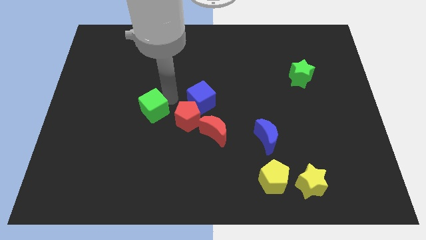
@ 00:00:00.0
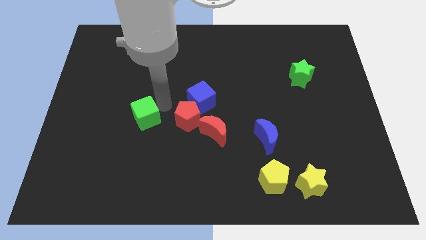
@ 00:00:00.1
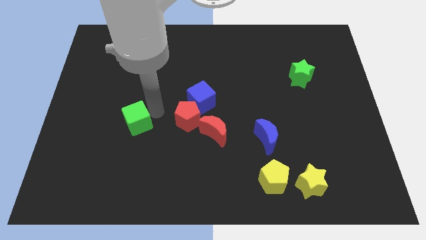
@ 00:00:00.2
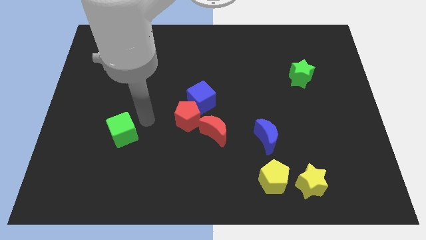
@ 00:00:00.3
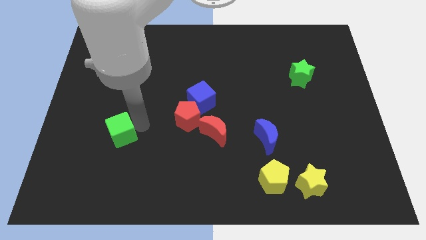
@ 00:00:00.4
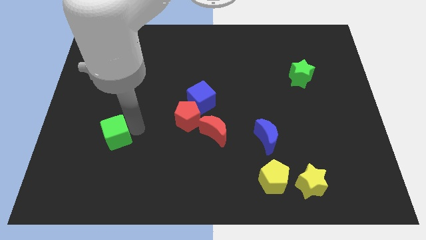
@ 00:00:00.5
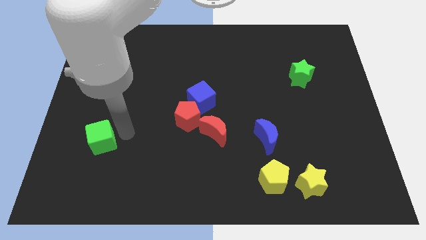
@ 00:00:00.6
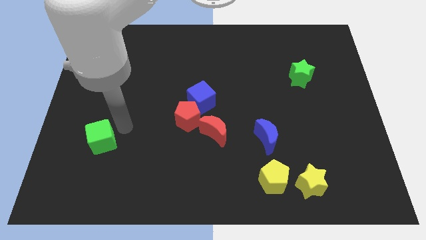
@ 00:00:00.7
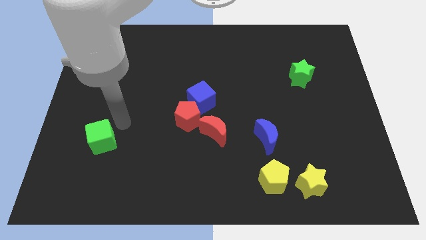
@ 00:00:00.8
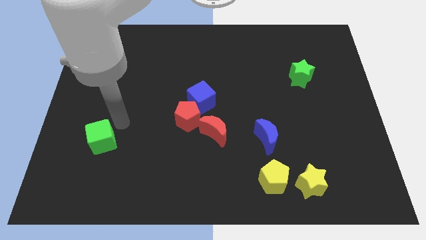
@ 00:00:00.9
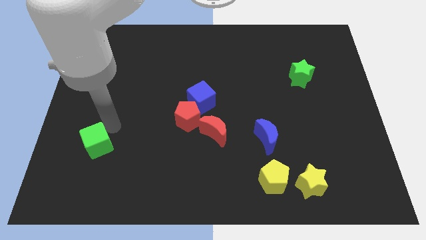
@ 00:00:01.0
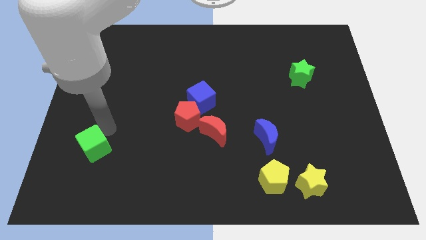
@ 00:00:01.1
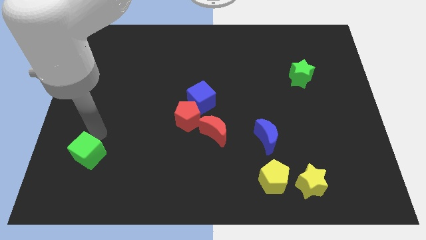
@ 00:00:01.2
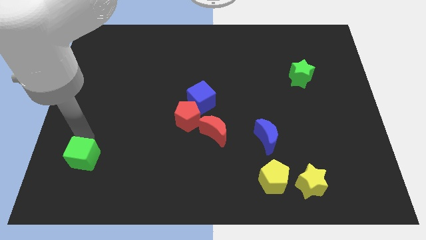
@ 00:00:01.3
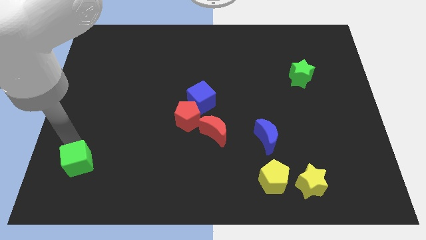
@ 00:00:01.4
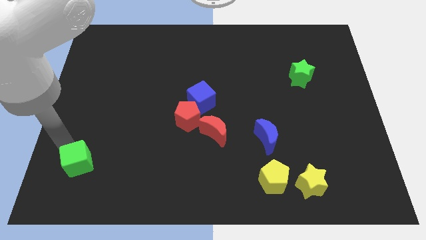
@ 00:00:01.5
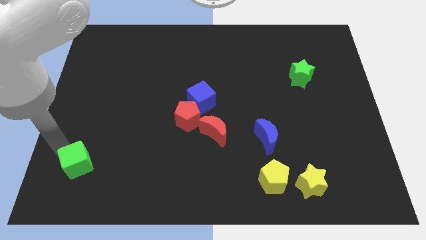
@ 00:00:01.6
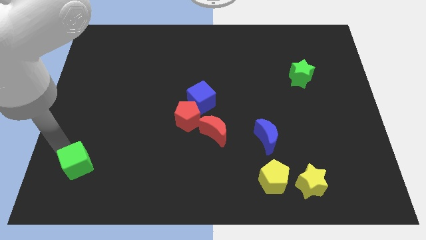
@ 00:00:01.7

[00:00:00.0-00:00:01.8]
move green cube towards bottom side of the board

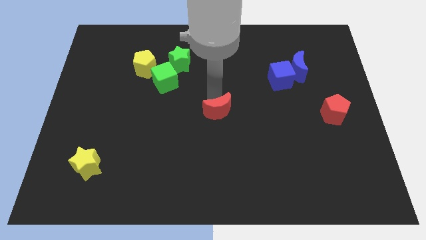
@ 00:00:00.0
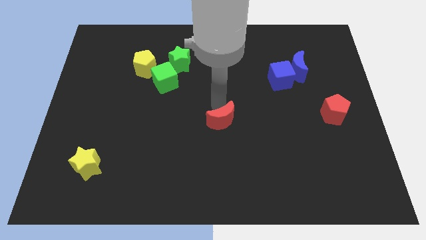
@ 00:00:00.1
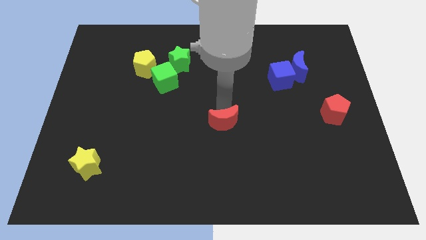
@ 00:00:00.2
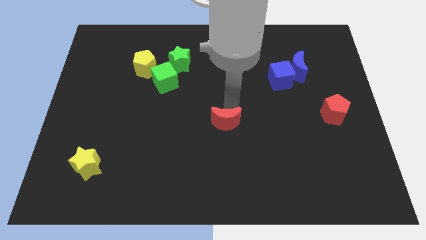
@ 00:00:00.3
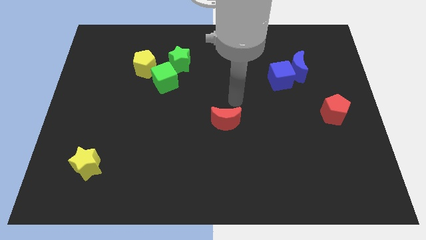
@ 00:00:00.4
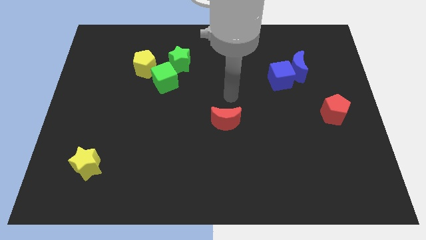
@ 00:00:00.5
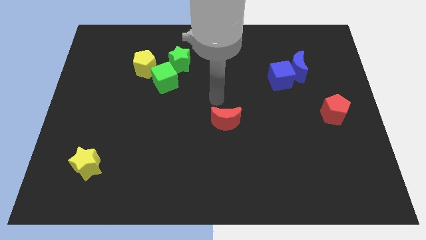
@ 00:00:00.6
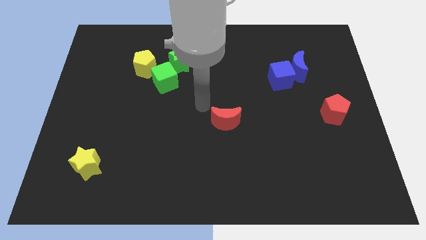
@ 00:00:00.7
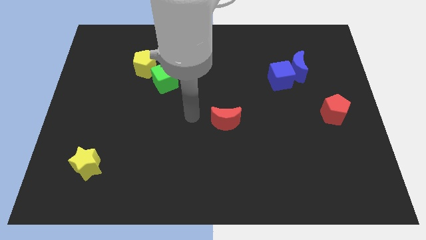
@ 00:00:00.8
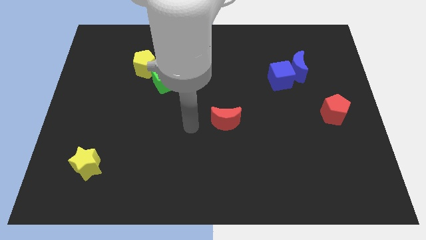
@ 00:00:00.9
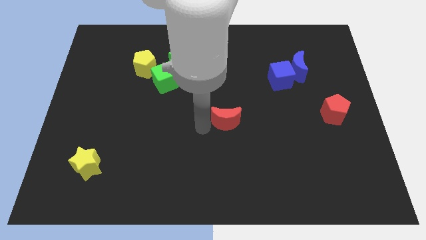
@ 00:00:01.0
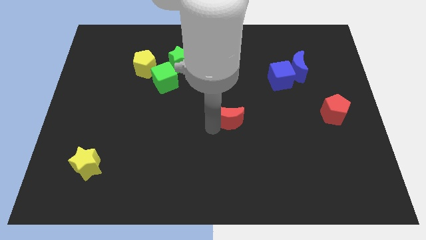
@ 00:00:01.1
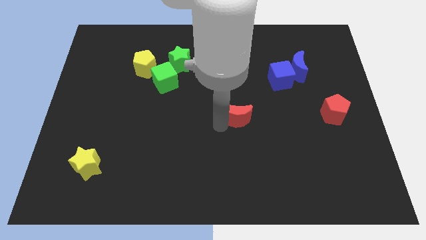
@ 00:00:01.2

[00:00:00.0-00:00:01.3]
place the red crescent horizontally to the left side of the red pentagon

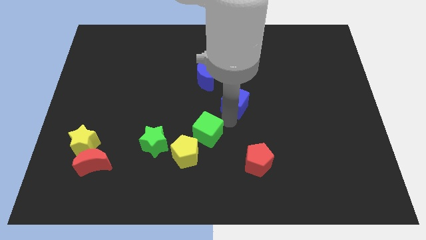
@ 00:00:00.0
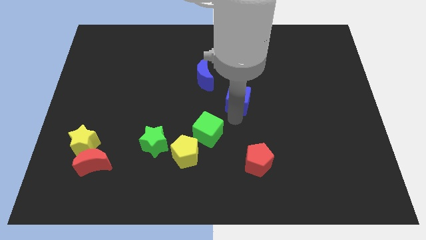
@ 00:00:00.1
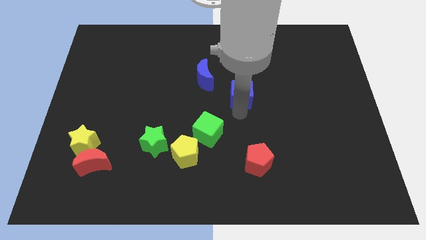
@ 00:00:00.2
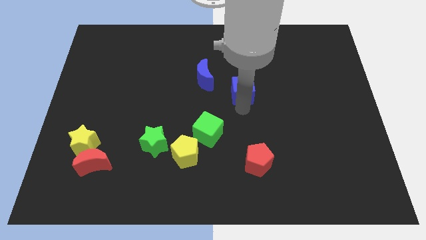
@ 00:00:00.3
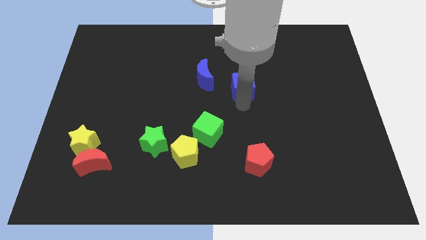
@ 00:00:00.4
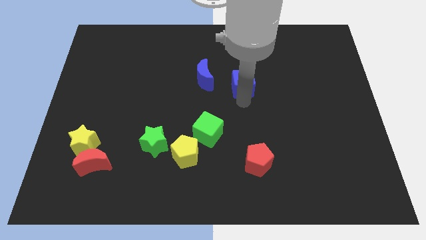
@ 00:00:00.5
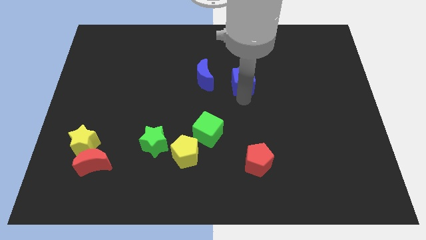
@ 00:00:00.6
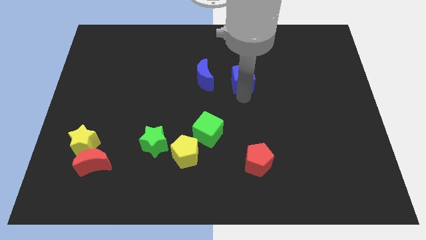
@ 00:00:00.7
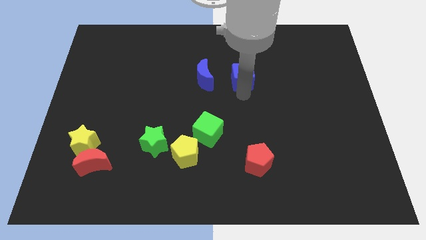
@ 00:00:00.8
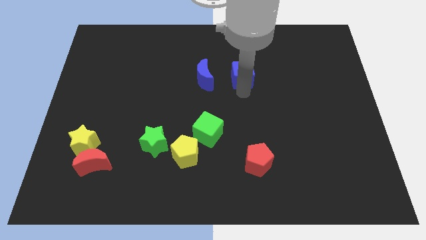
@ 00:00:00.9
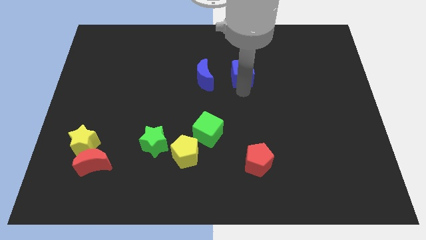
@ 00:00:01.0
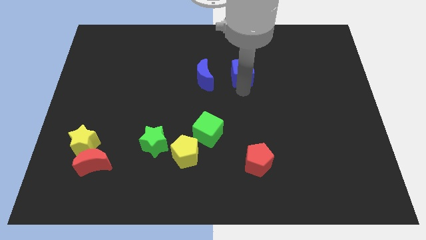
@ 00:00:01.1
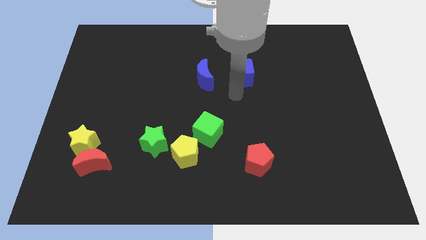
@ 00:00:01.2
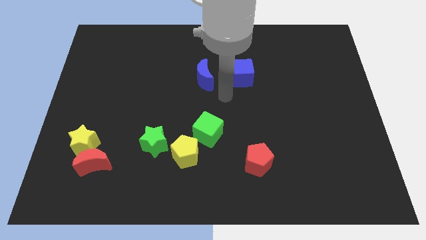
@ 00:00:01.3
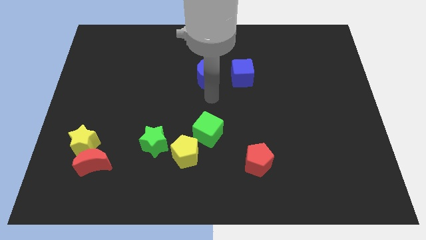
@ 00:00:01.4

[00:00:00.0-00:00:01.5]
move the blue cube to the right side of the blue crescent

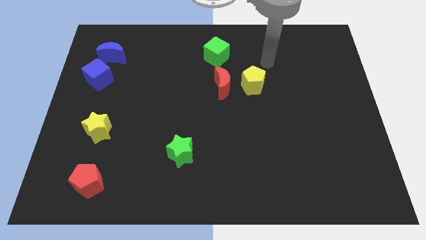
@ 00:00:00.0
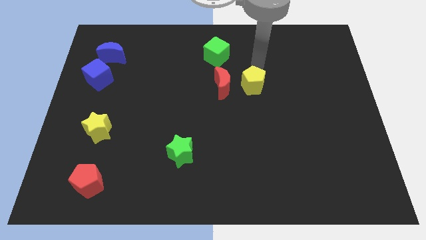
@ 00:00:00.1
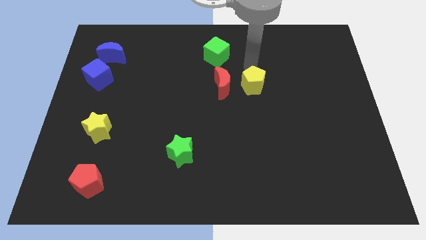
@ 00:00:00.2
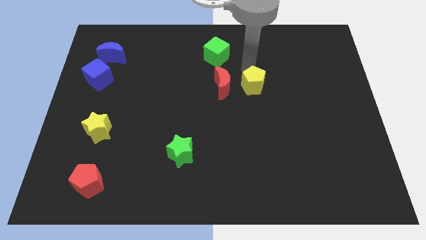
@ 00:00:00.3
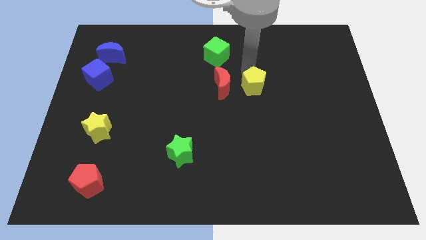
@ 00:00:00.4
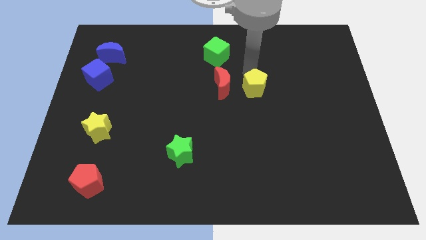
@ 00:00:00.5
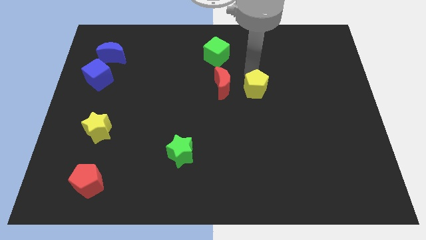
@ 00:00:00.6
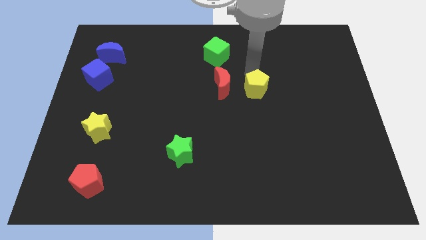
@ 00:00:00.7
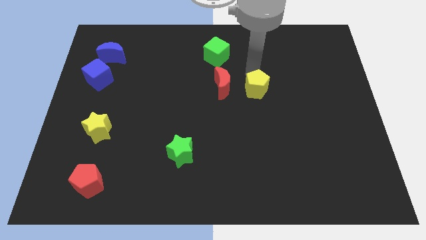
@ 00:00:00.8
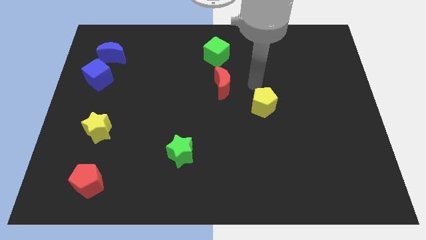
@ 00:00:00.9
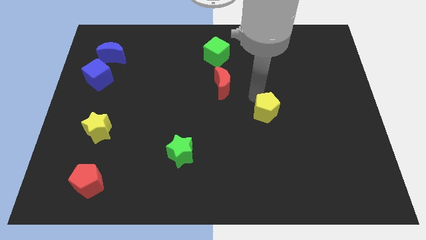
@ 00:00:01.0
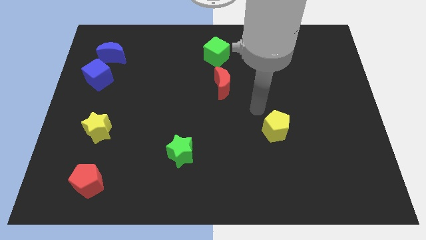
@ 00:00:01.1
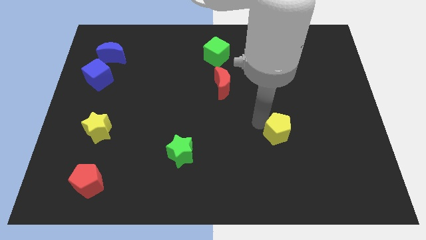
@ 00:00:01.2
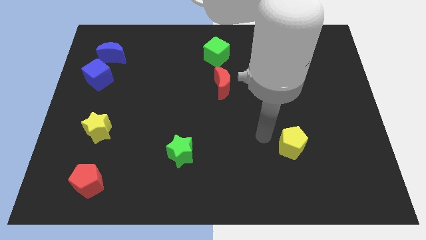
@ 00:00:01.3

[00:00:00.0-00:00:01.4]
push yellow pentagon downwards

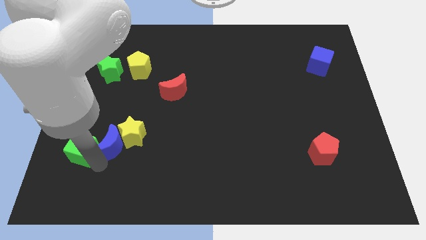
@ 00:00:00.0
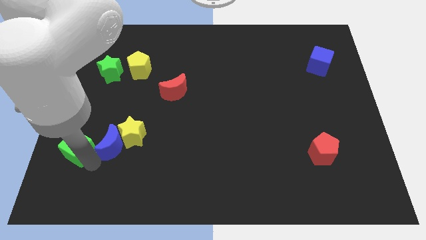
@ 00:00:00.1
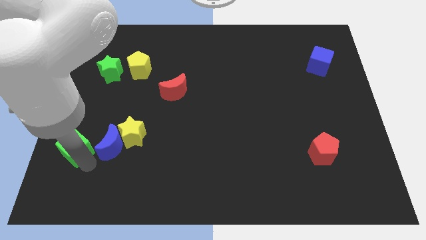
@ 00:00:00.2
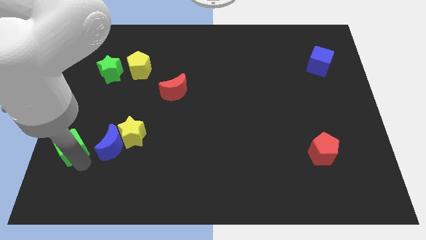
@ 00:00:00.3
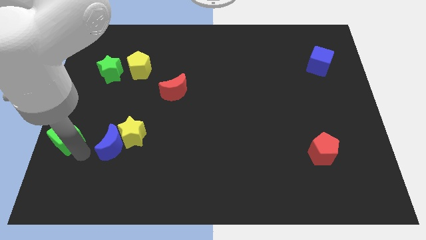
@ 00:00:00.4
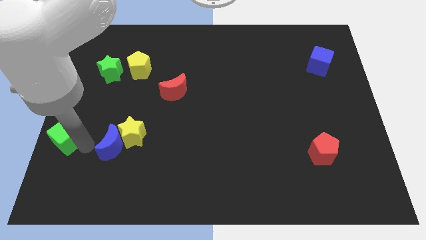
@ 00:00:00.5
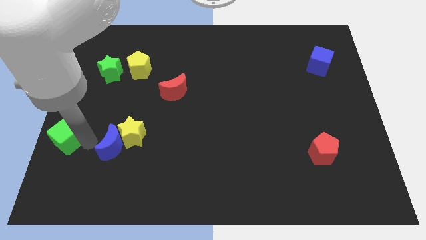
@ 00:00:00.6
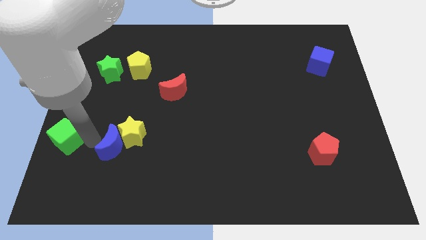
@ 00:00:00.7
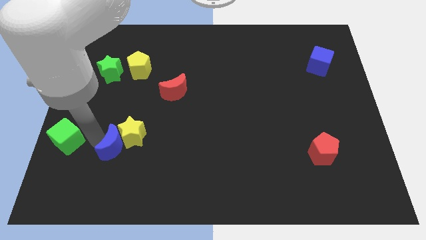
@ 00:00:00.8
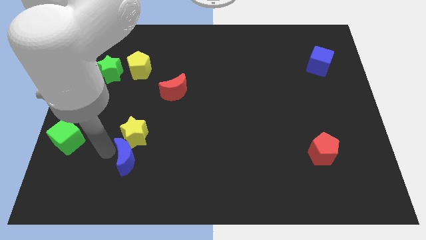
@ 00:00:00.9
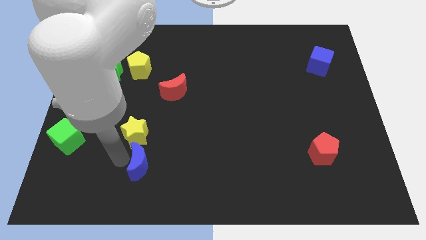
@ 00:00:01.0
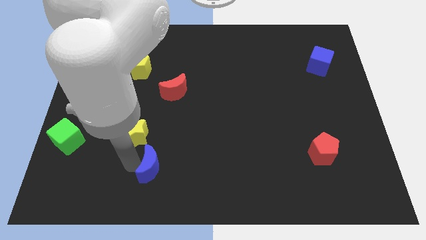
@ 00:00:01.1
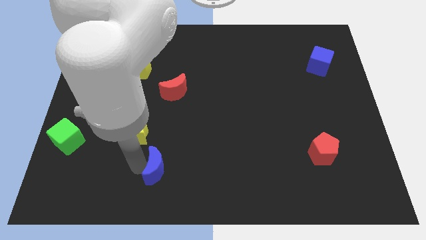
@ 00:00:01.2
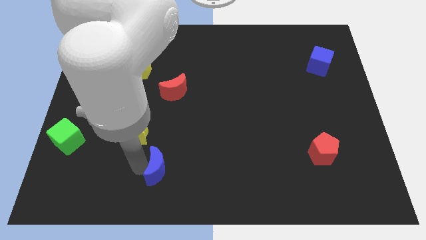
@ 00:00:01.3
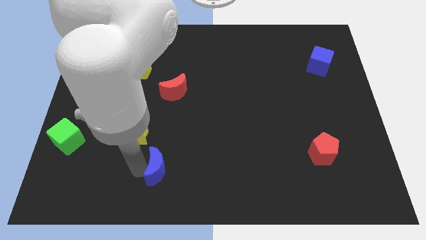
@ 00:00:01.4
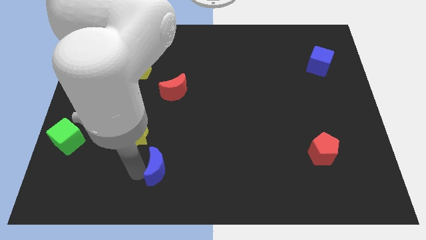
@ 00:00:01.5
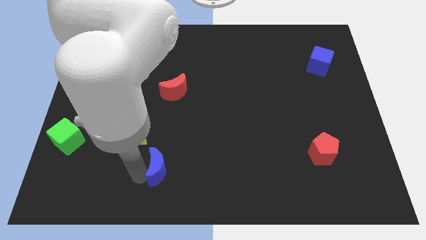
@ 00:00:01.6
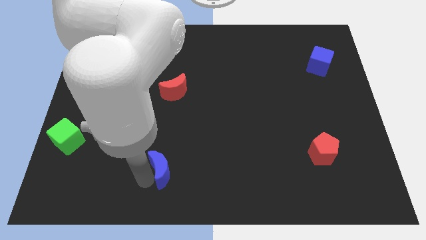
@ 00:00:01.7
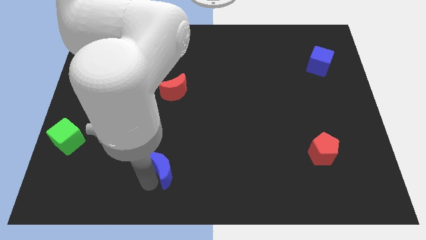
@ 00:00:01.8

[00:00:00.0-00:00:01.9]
separate green cube and the blue crescent

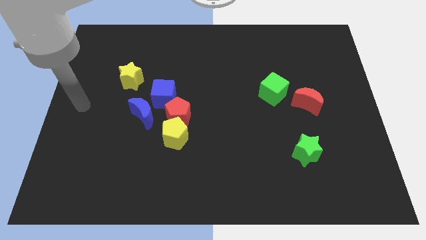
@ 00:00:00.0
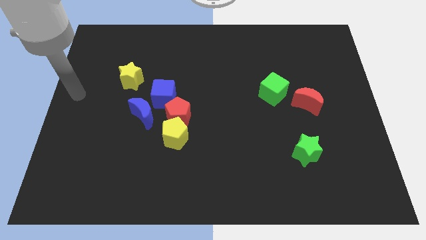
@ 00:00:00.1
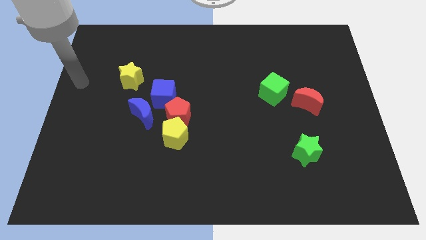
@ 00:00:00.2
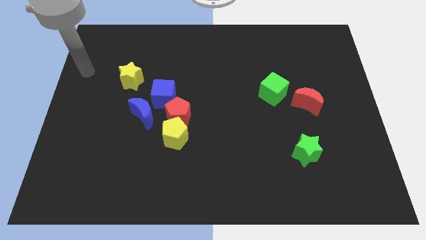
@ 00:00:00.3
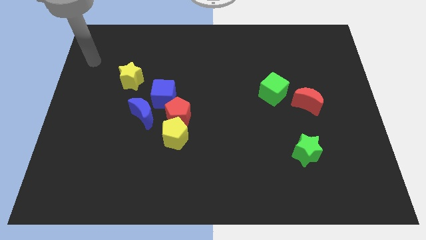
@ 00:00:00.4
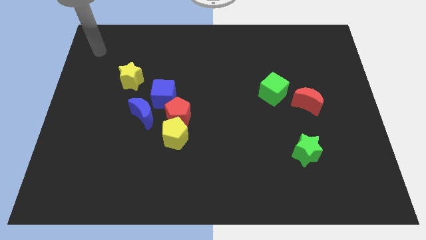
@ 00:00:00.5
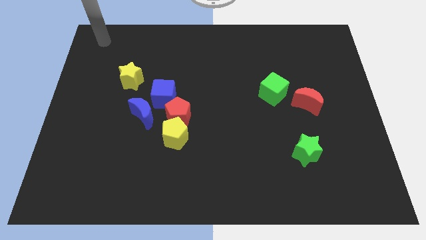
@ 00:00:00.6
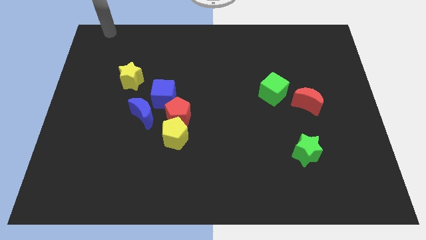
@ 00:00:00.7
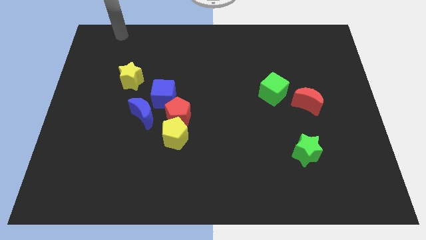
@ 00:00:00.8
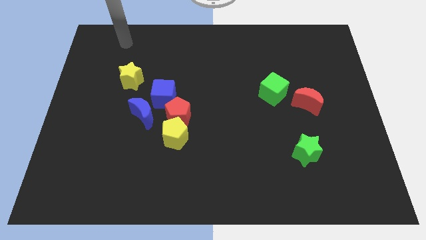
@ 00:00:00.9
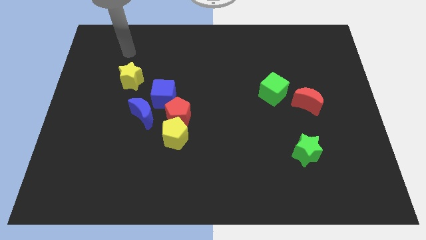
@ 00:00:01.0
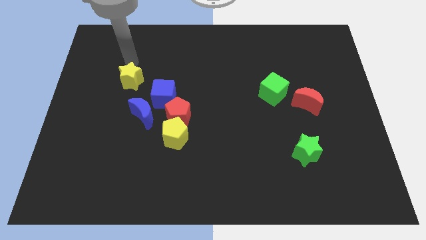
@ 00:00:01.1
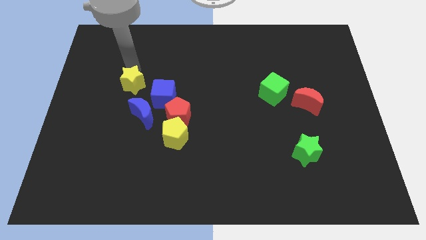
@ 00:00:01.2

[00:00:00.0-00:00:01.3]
place the arm above the yellow star
